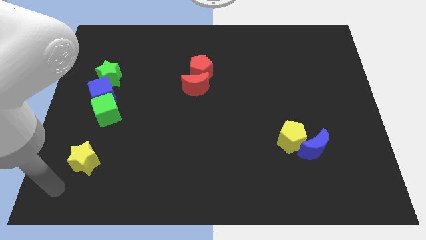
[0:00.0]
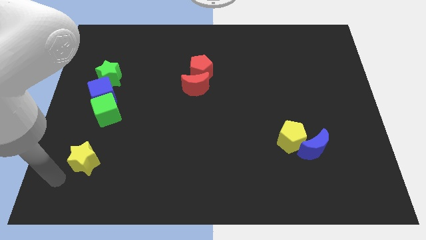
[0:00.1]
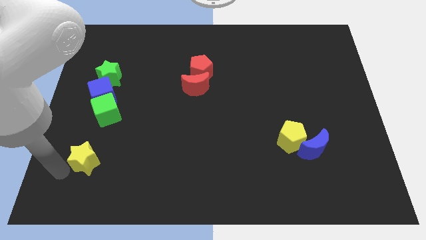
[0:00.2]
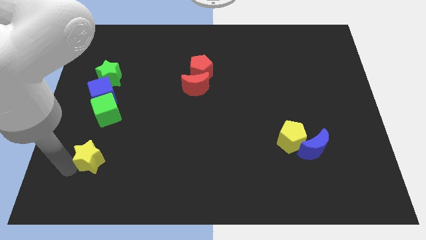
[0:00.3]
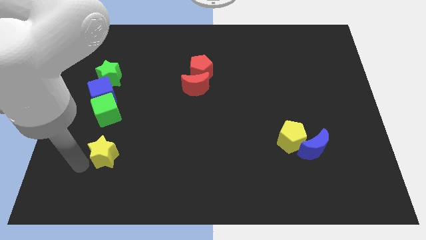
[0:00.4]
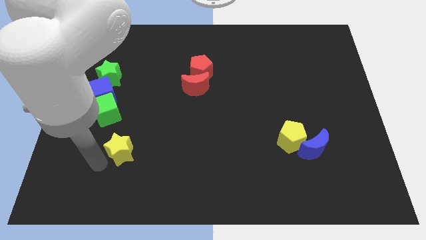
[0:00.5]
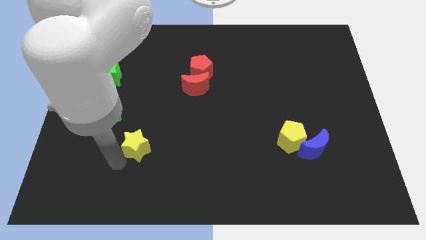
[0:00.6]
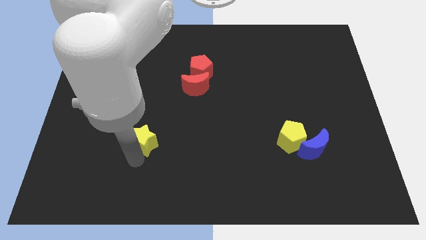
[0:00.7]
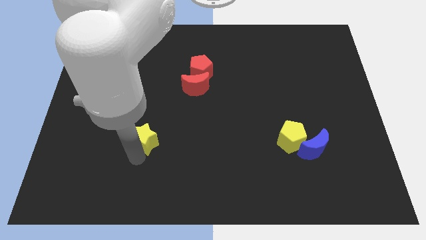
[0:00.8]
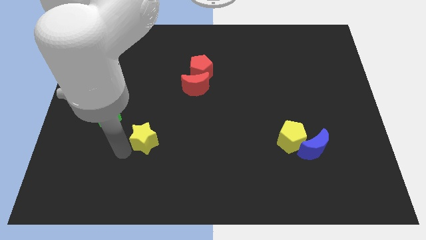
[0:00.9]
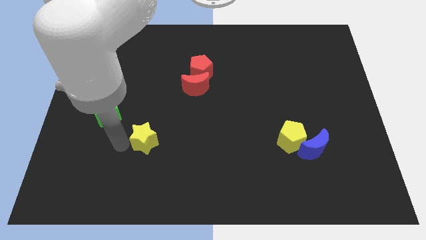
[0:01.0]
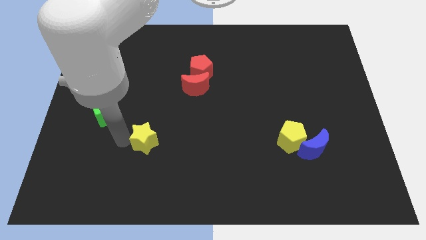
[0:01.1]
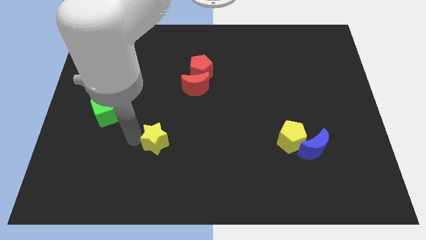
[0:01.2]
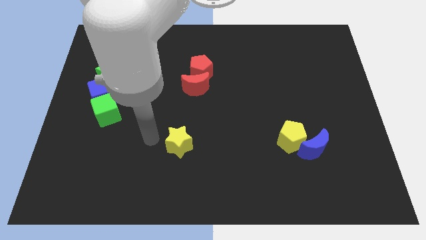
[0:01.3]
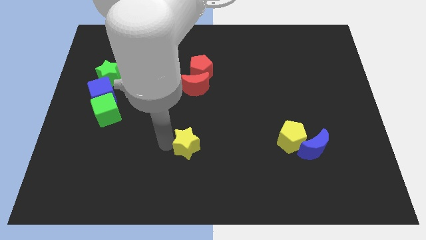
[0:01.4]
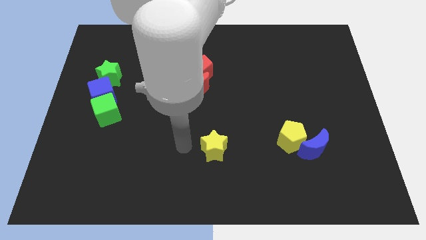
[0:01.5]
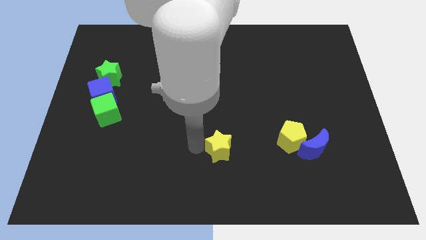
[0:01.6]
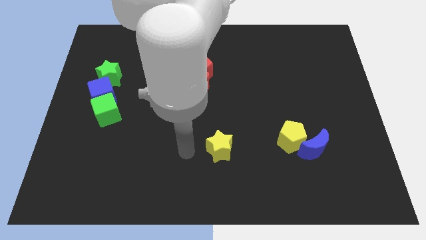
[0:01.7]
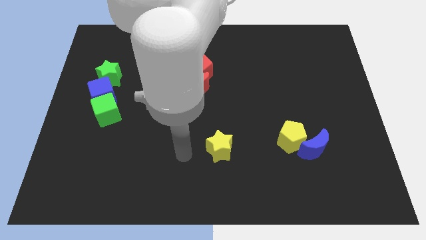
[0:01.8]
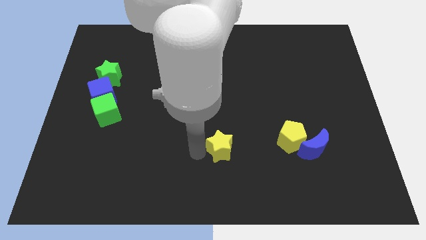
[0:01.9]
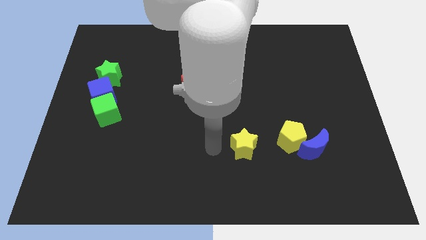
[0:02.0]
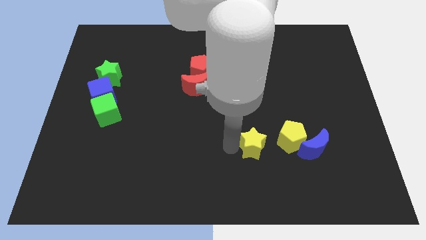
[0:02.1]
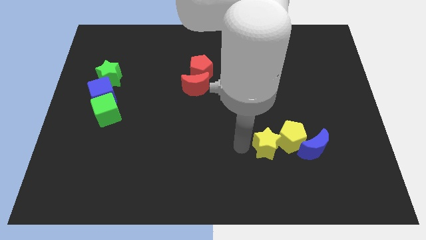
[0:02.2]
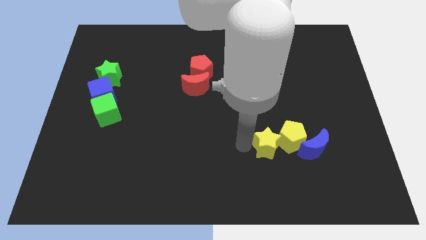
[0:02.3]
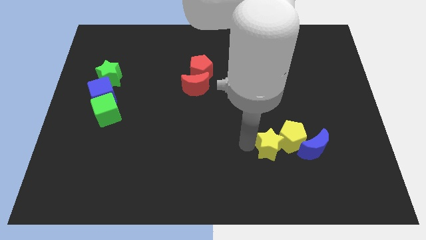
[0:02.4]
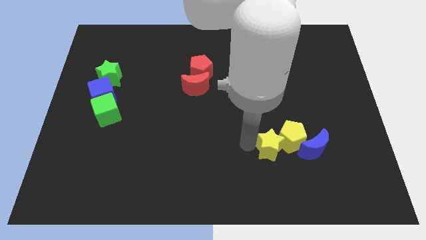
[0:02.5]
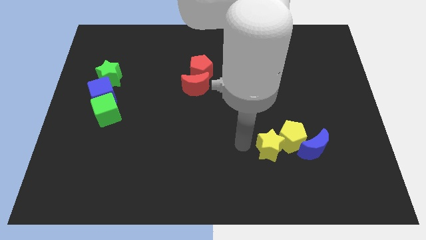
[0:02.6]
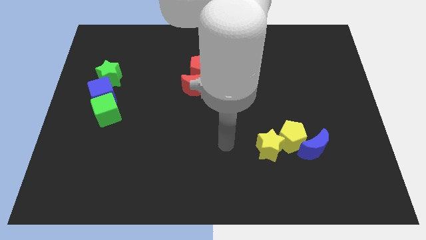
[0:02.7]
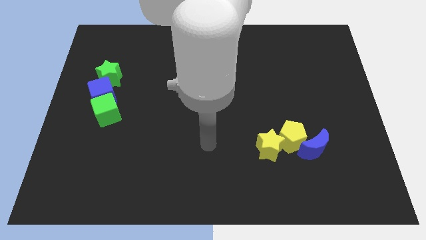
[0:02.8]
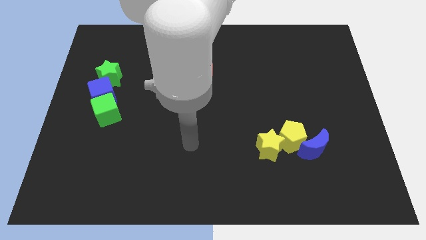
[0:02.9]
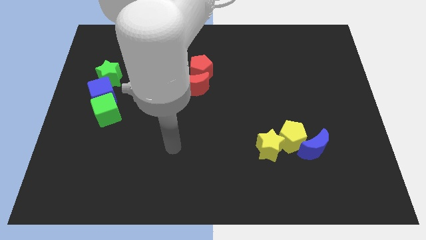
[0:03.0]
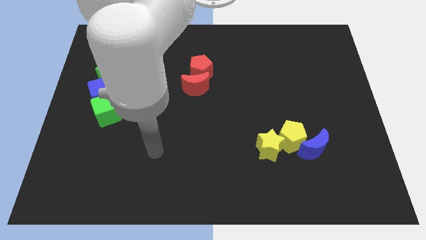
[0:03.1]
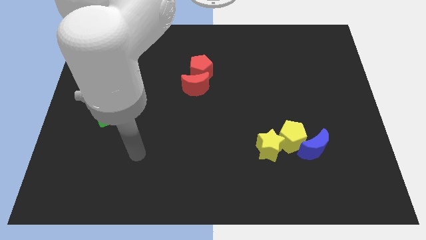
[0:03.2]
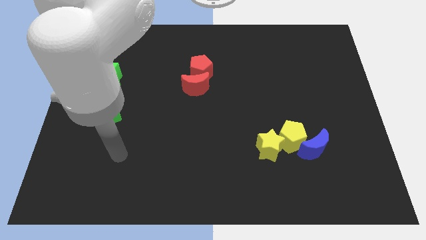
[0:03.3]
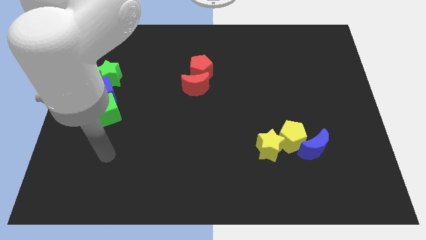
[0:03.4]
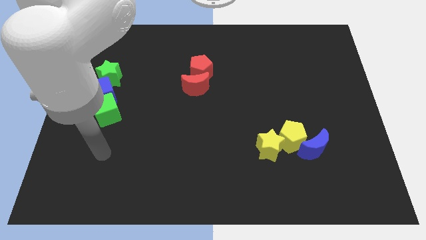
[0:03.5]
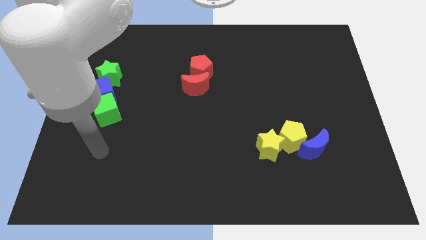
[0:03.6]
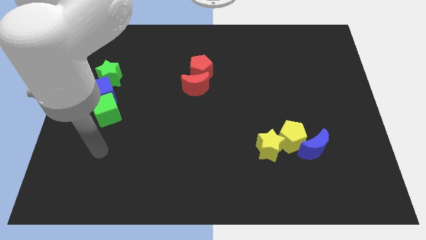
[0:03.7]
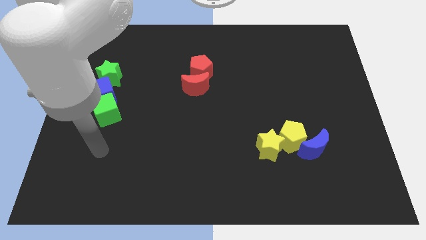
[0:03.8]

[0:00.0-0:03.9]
push the yellow star into the yellow pentagon

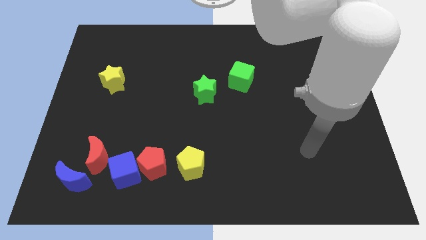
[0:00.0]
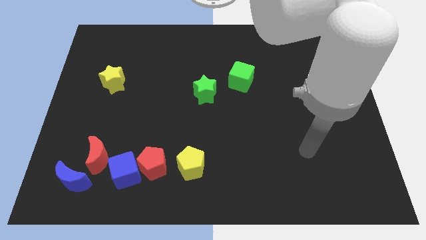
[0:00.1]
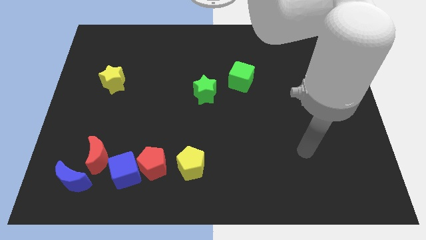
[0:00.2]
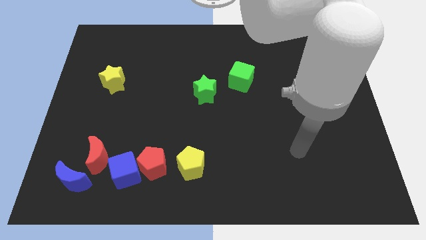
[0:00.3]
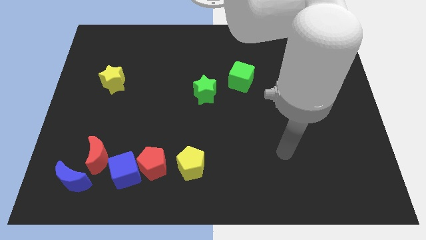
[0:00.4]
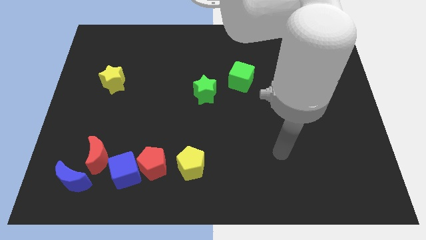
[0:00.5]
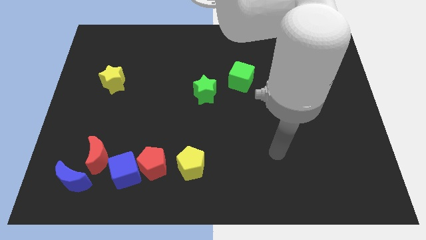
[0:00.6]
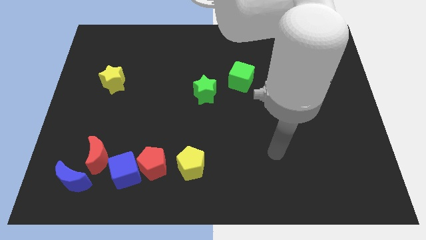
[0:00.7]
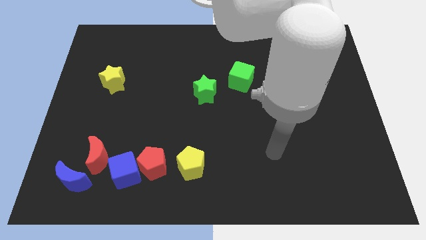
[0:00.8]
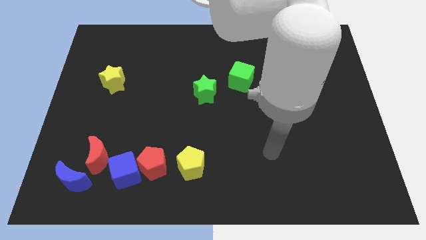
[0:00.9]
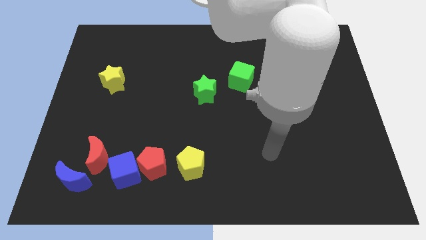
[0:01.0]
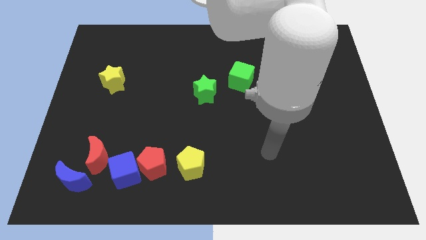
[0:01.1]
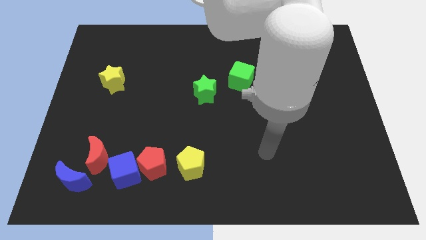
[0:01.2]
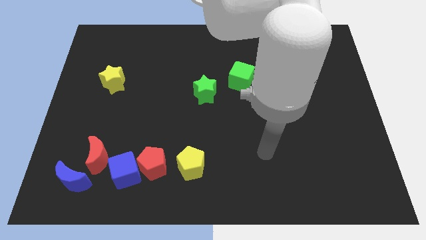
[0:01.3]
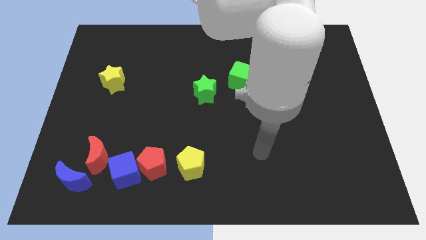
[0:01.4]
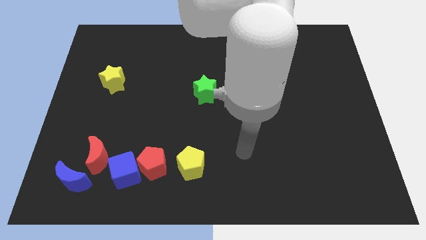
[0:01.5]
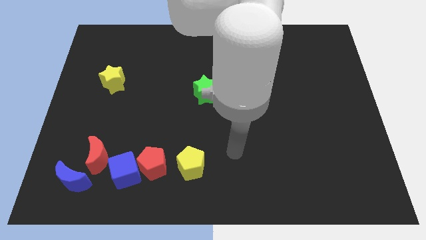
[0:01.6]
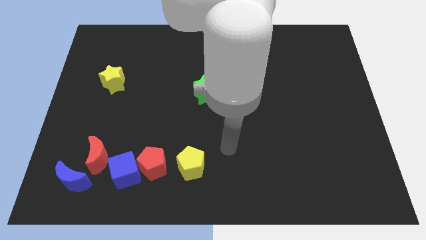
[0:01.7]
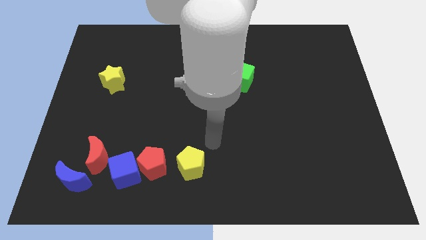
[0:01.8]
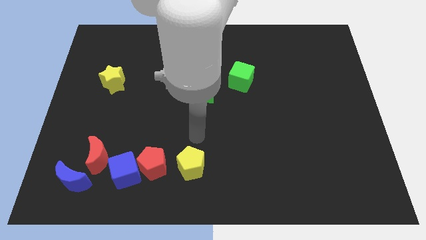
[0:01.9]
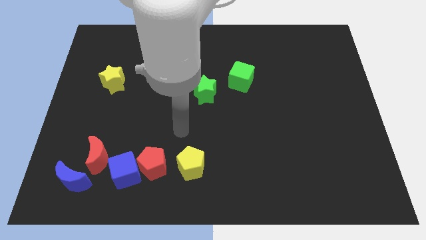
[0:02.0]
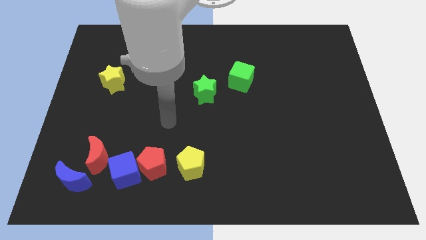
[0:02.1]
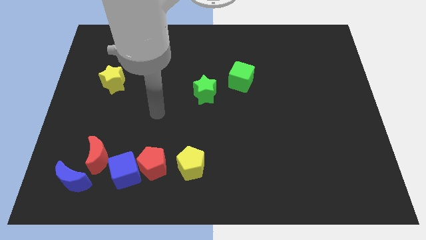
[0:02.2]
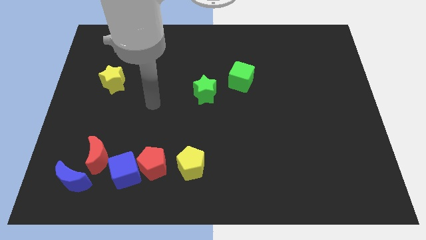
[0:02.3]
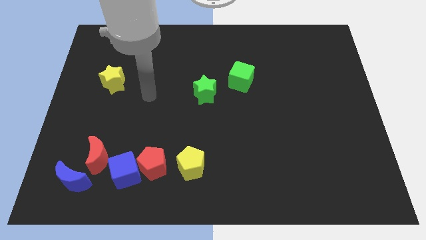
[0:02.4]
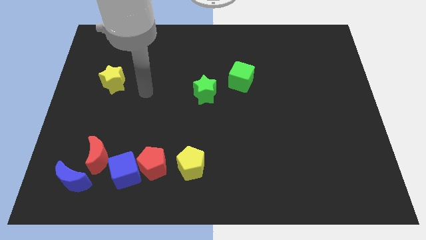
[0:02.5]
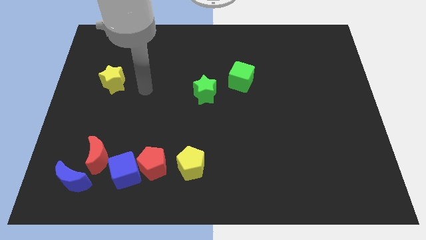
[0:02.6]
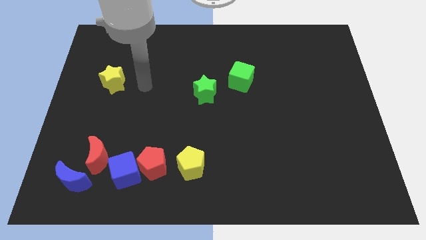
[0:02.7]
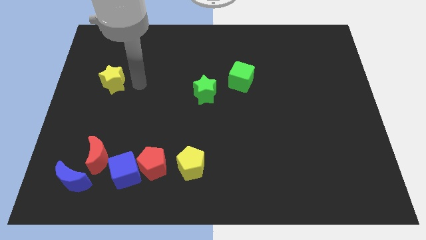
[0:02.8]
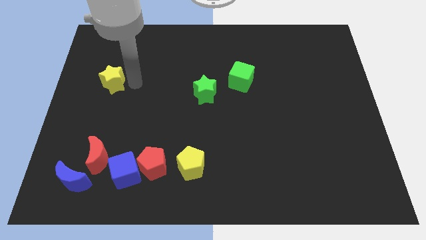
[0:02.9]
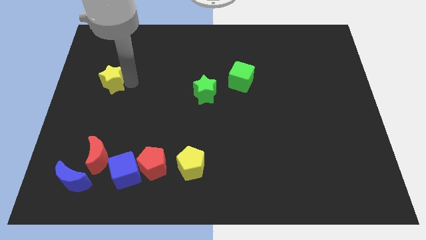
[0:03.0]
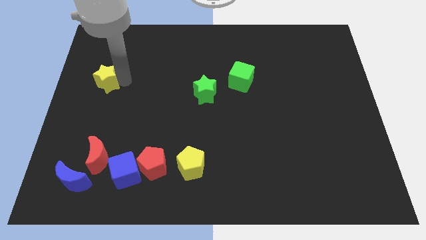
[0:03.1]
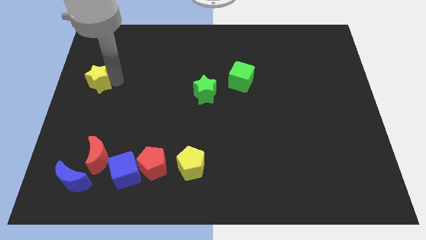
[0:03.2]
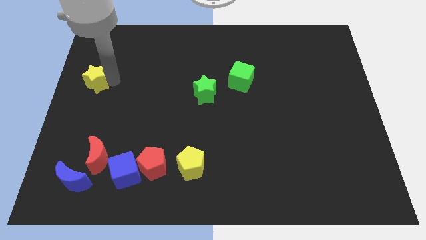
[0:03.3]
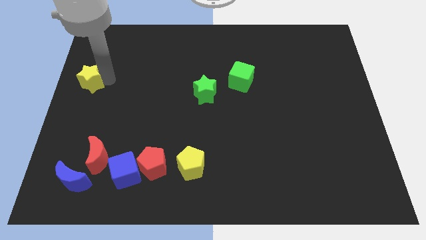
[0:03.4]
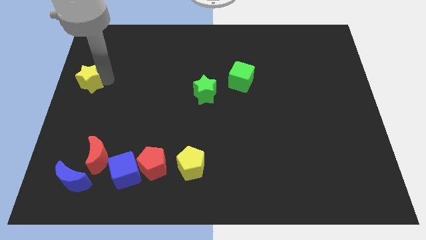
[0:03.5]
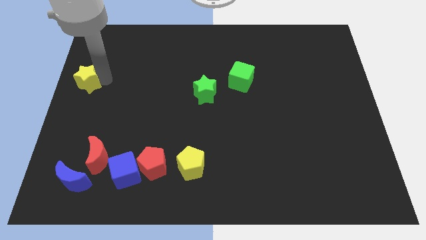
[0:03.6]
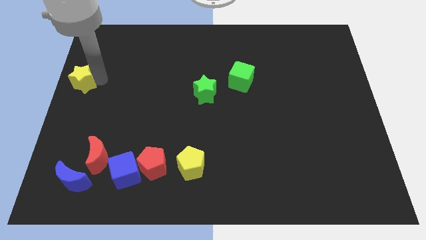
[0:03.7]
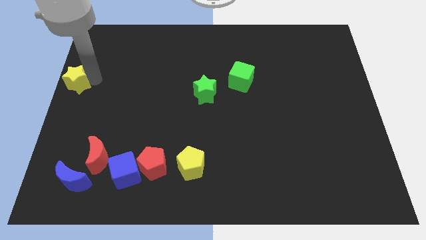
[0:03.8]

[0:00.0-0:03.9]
move the yellow star to left side of the board

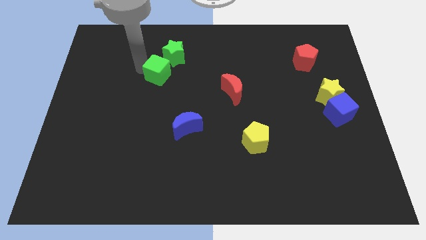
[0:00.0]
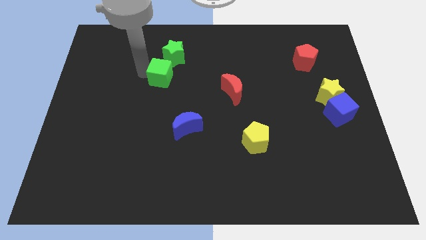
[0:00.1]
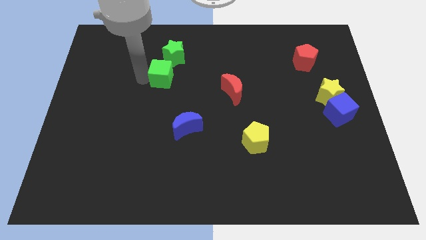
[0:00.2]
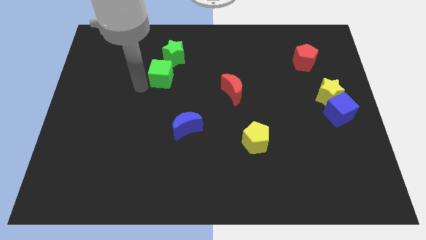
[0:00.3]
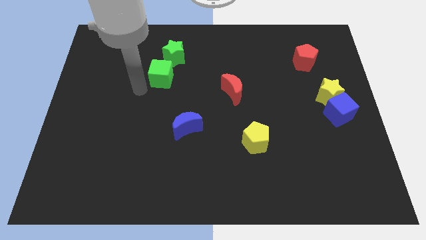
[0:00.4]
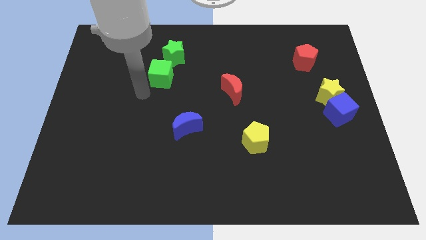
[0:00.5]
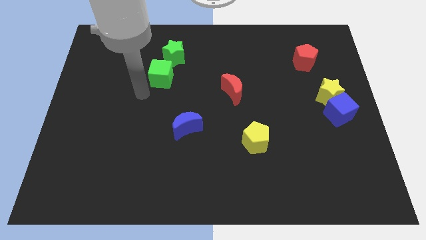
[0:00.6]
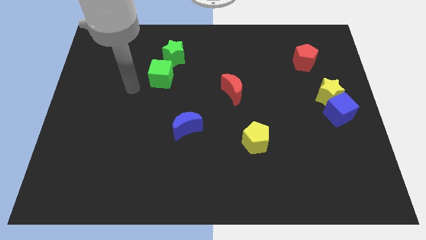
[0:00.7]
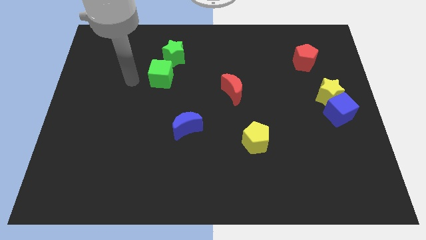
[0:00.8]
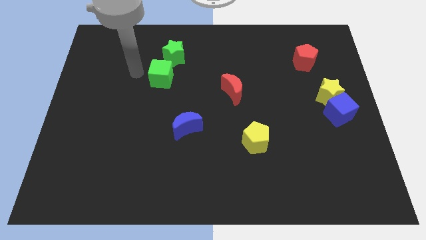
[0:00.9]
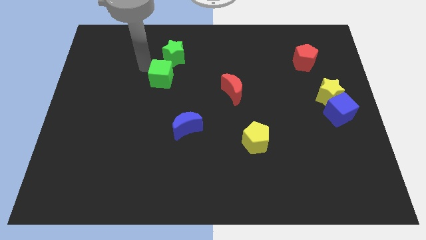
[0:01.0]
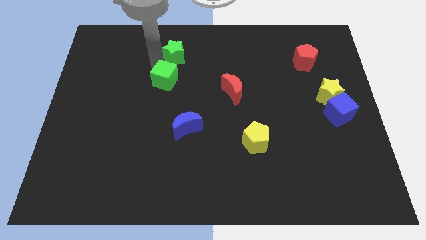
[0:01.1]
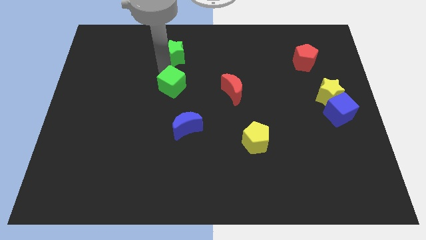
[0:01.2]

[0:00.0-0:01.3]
place the green cube below the green star
